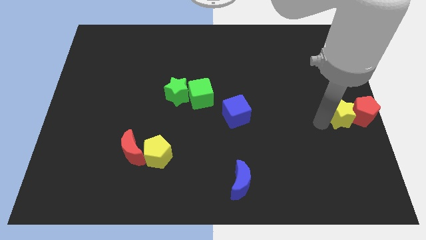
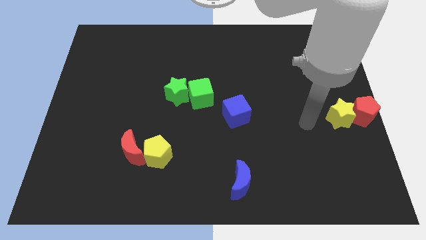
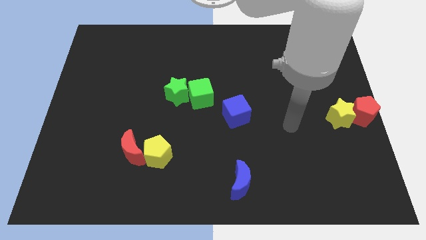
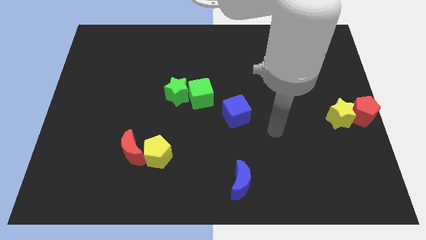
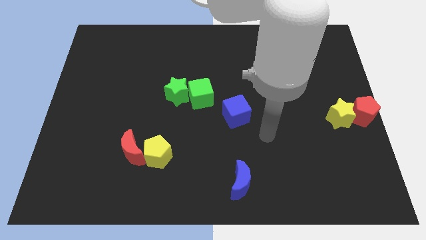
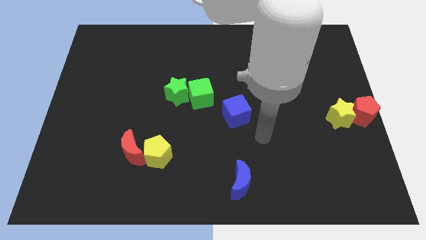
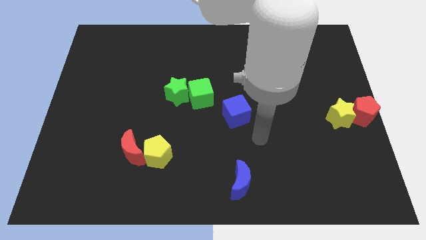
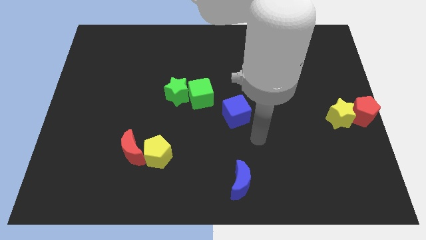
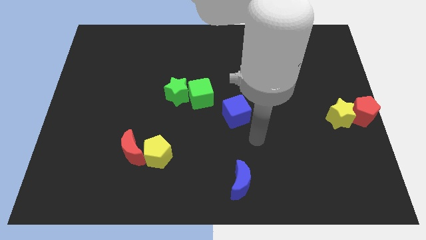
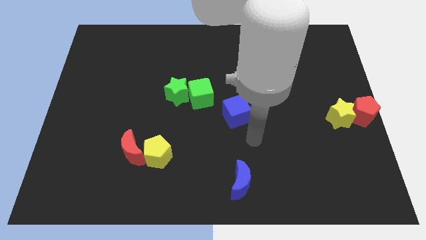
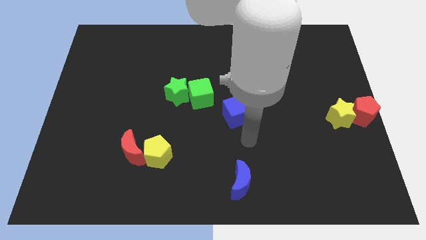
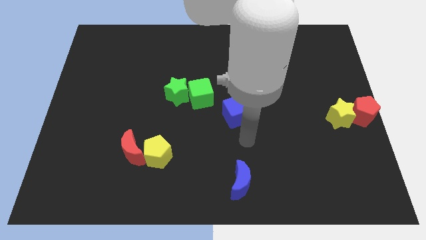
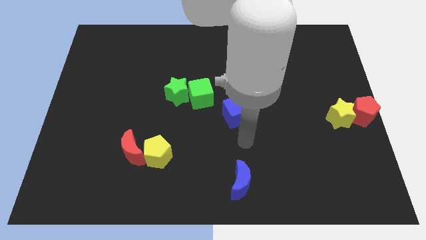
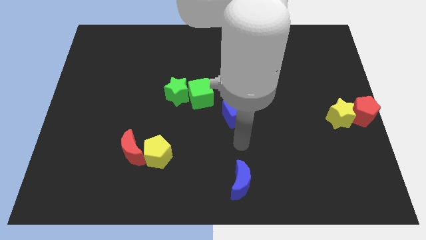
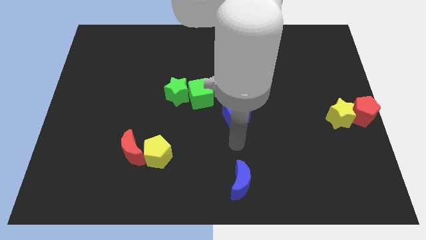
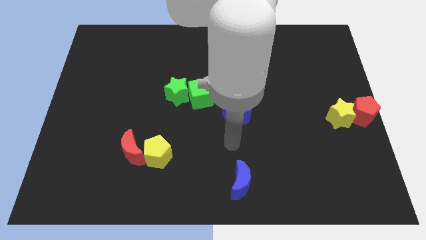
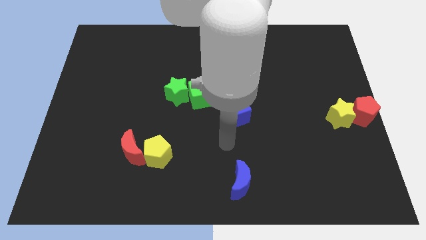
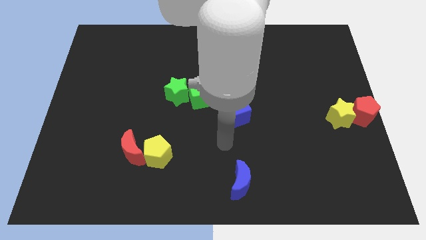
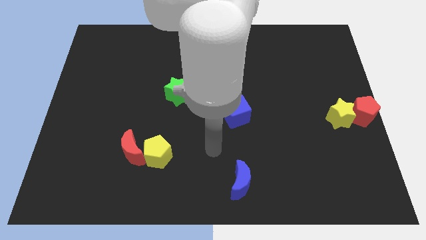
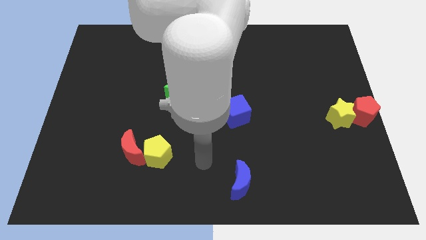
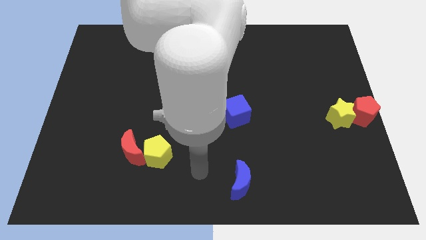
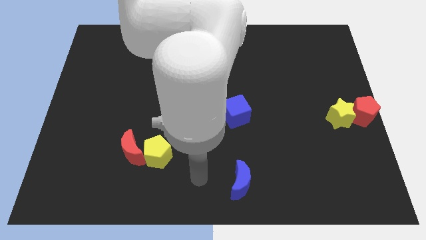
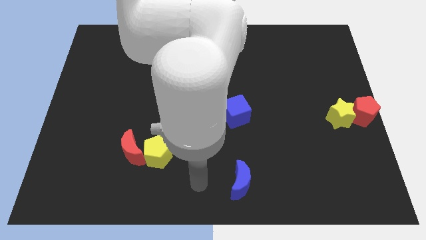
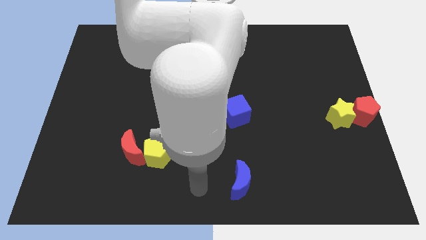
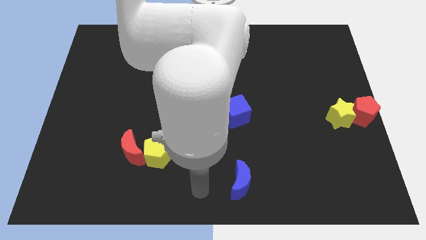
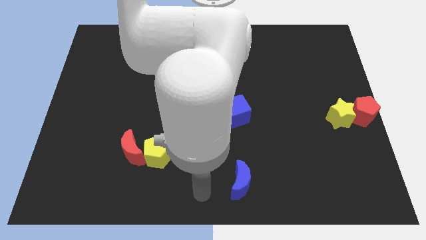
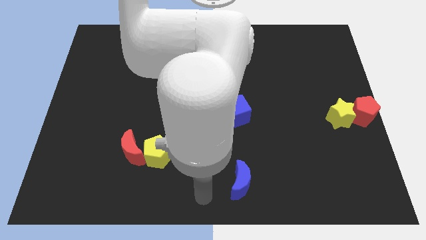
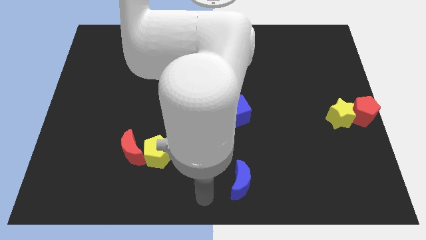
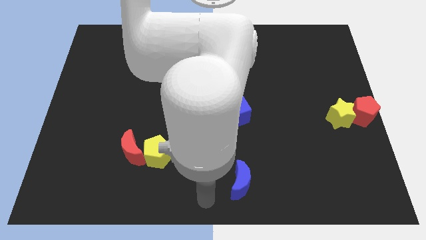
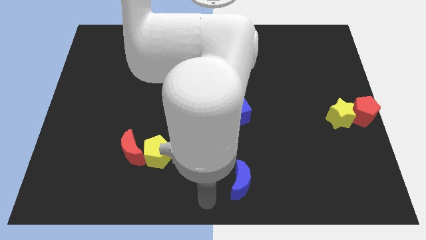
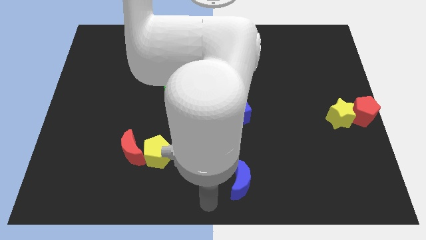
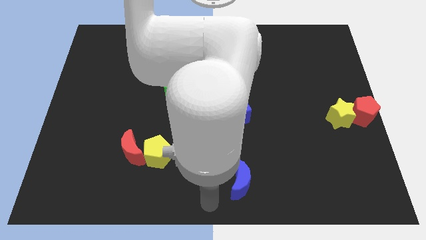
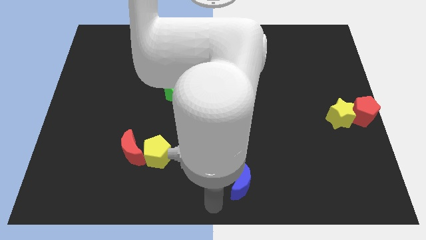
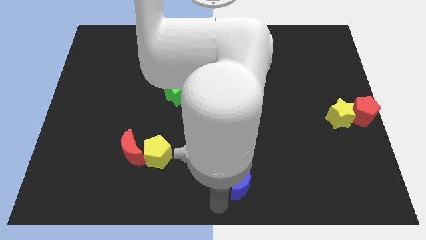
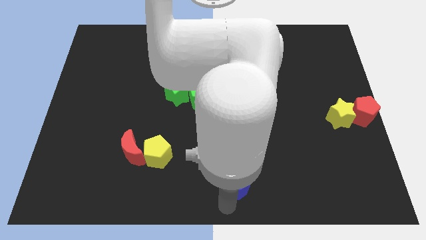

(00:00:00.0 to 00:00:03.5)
point the arm below the blue moon

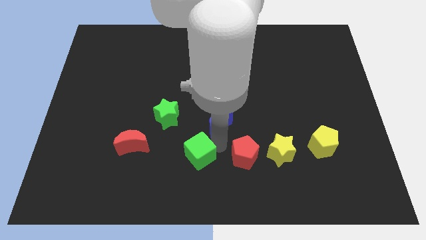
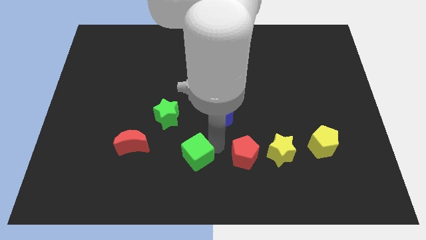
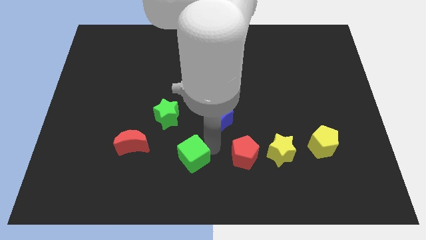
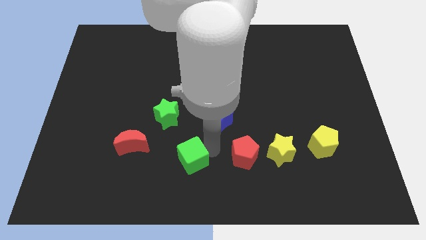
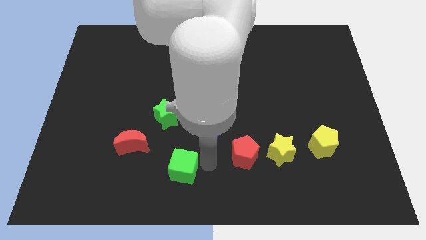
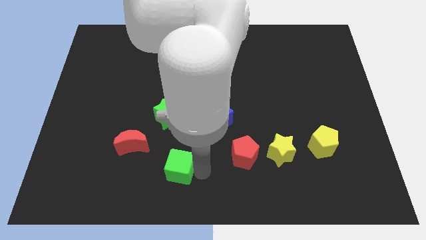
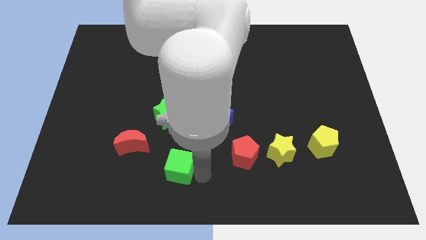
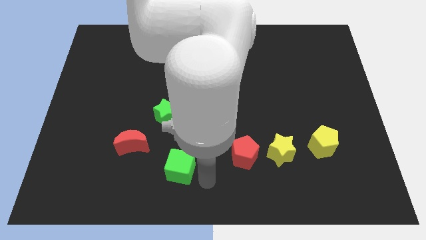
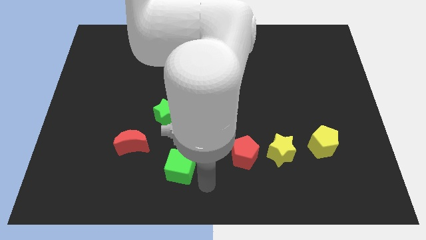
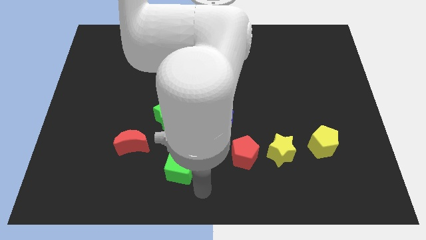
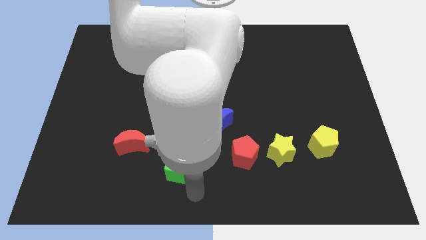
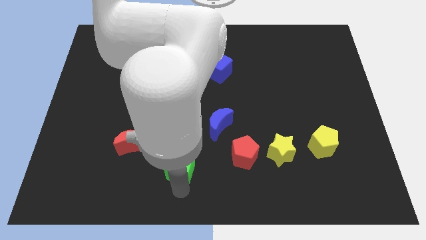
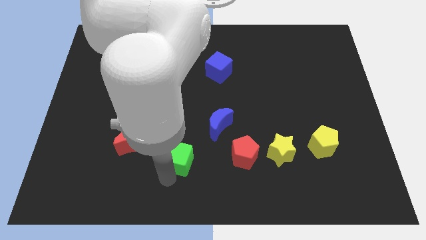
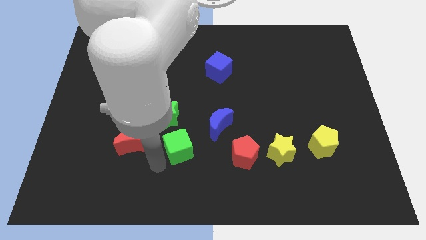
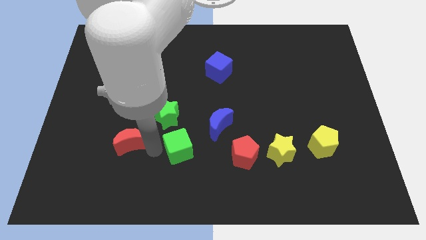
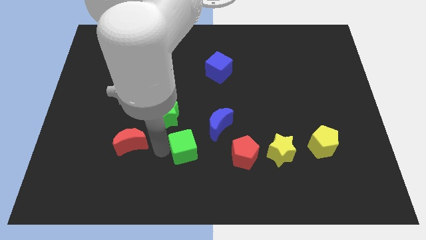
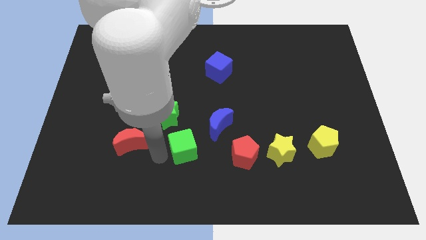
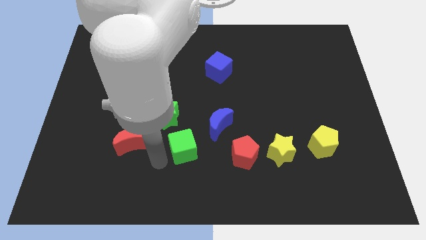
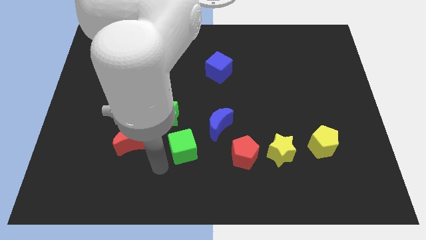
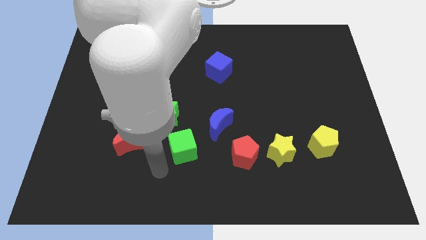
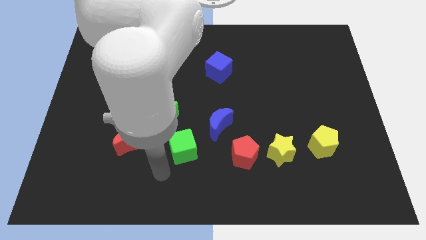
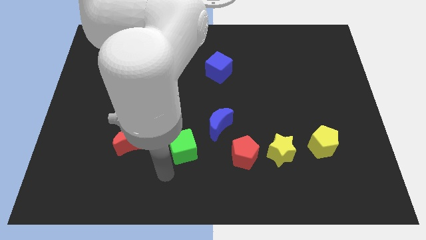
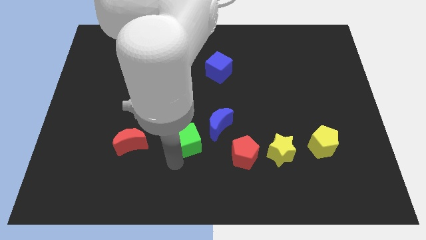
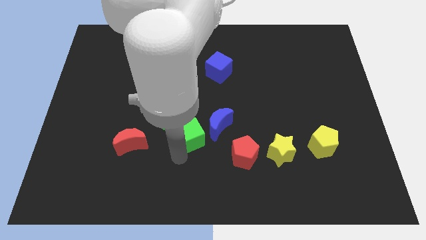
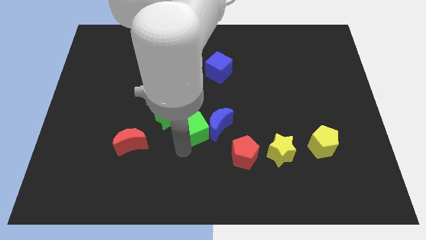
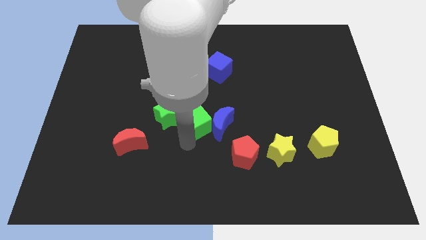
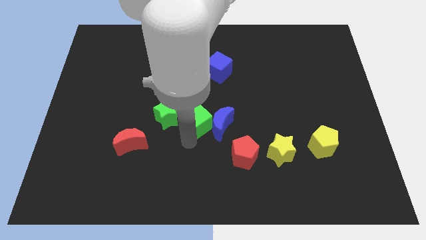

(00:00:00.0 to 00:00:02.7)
place the green square between the green star and the blue crescent

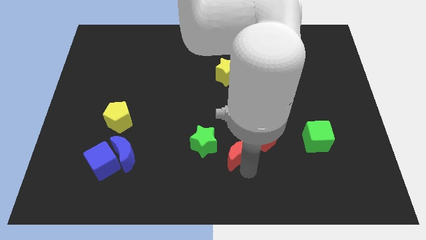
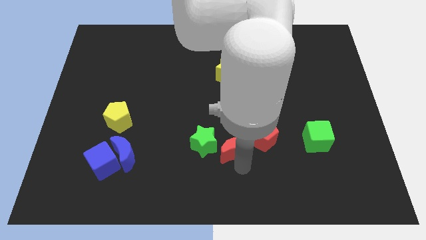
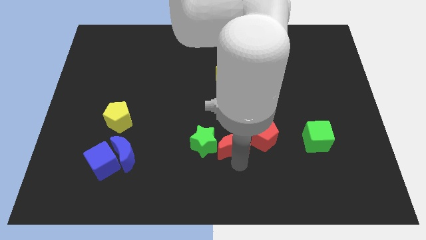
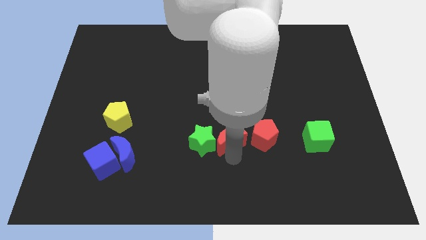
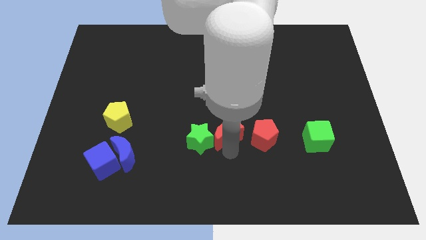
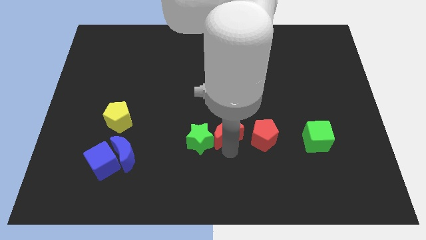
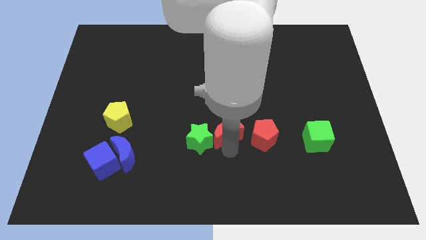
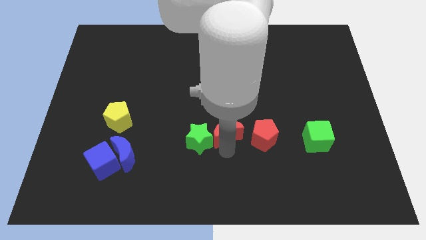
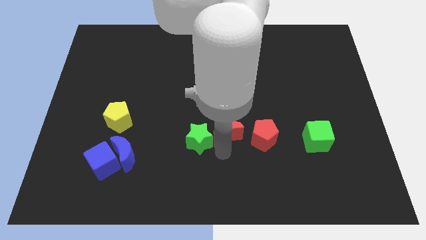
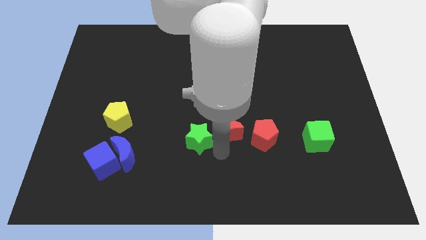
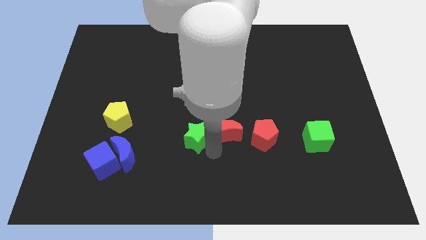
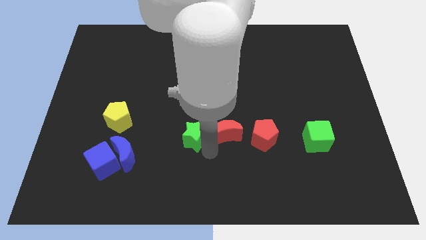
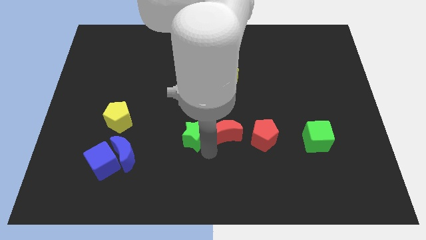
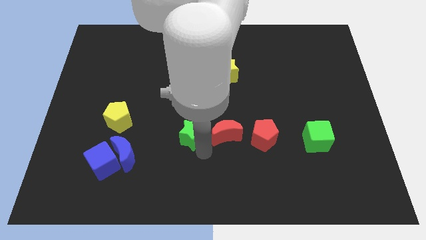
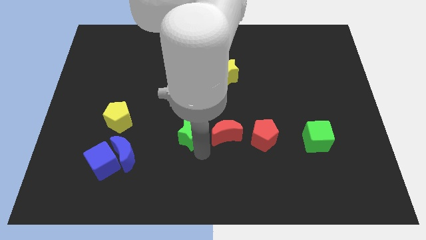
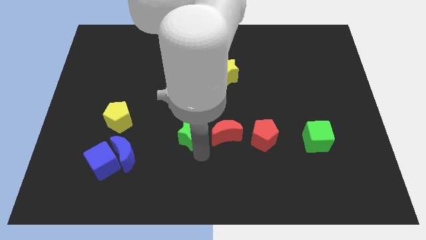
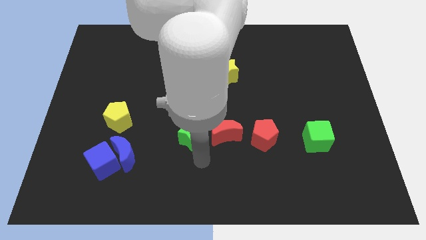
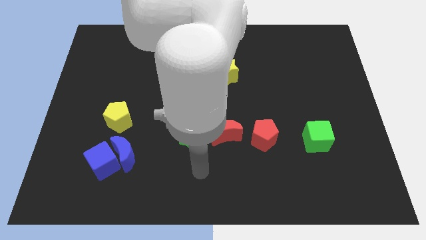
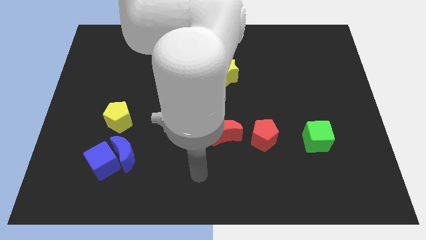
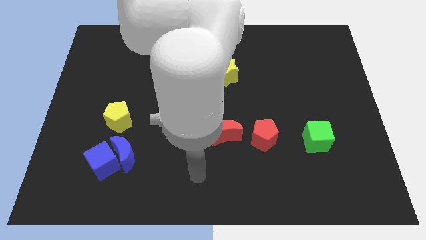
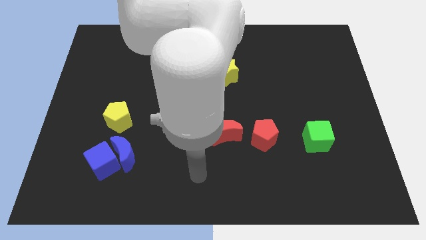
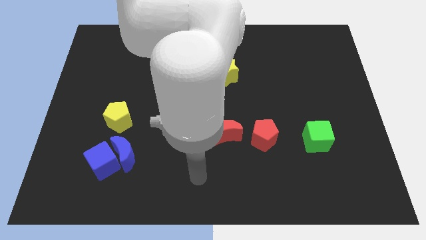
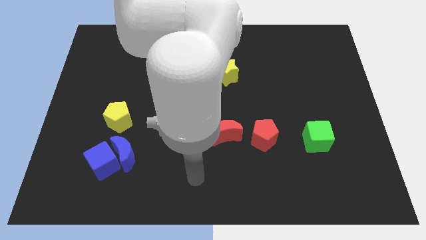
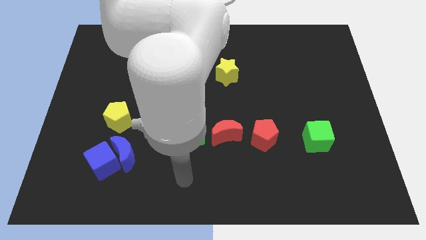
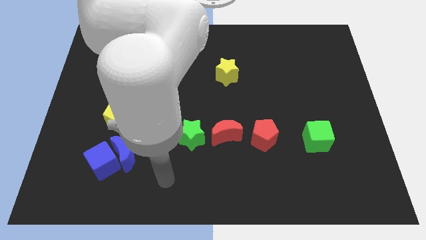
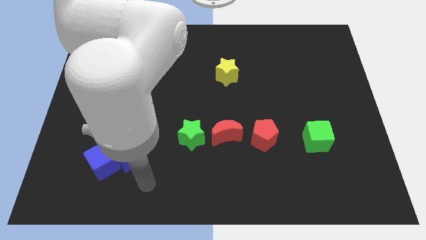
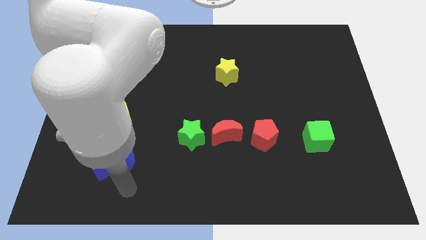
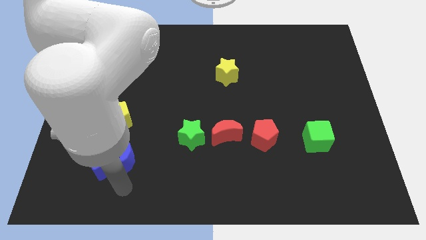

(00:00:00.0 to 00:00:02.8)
move the red moon right of the green star

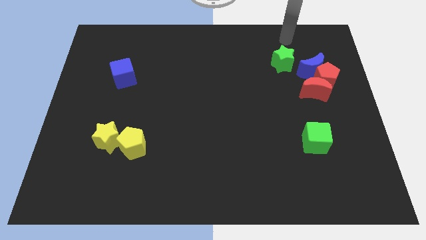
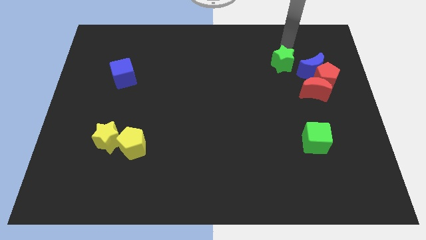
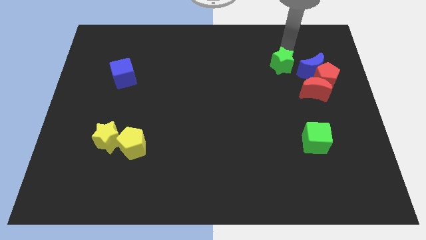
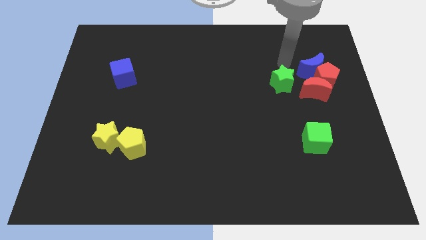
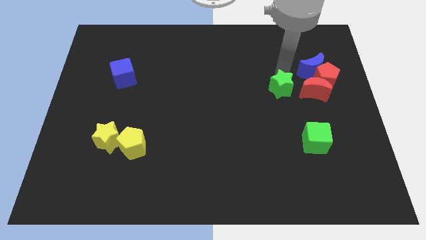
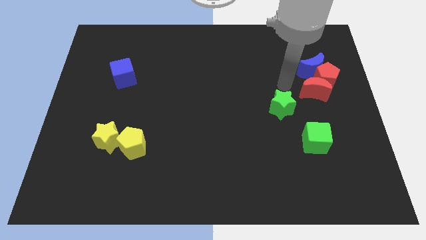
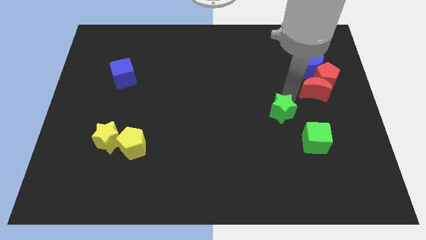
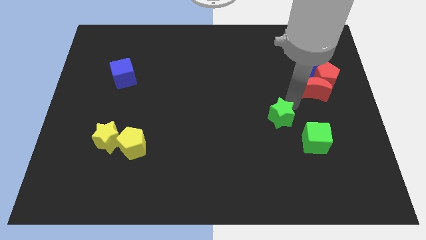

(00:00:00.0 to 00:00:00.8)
push the green star downward
